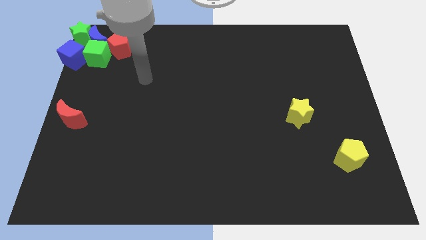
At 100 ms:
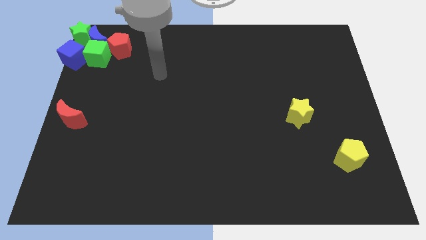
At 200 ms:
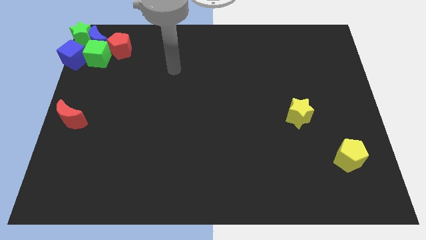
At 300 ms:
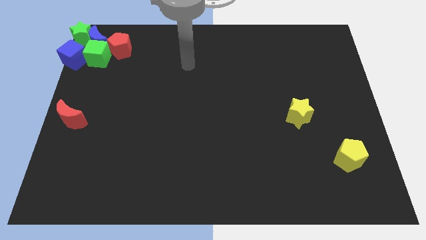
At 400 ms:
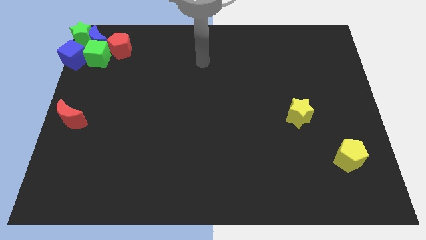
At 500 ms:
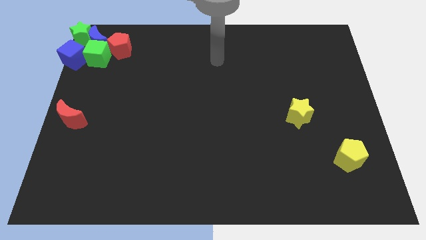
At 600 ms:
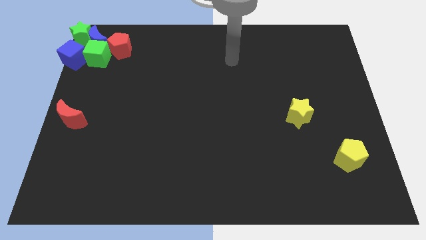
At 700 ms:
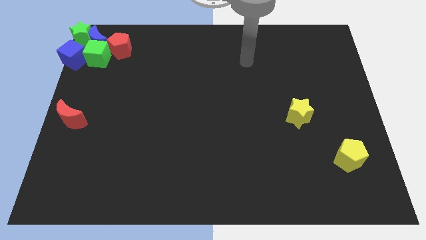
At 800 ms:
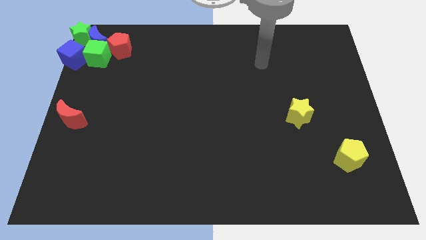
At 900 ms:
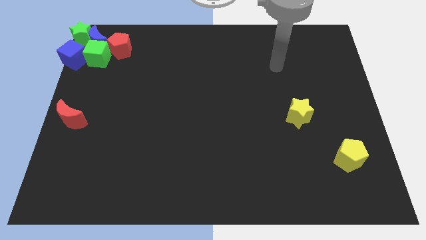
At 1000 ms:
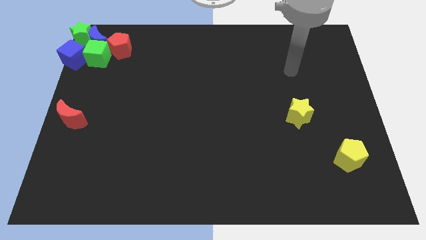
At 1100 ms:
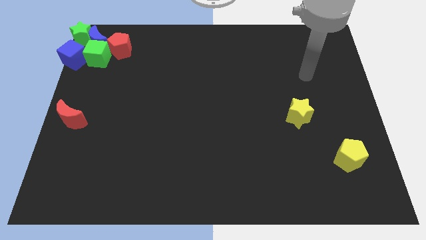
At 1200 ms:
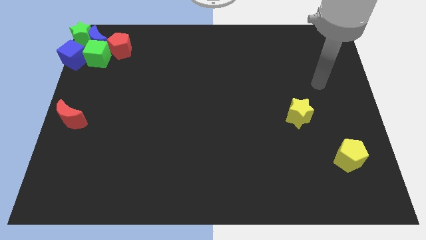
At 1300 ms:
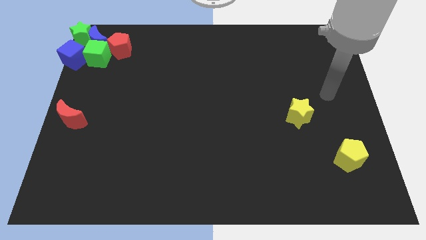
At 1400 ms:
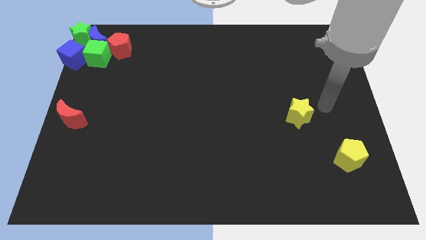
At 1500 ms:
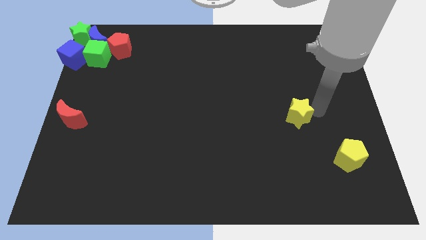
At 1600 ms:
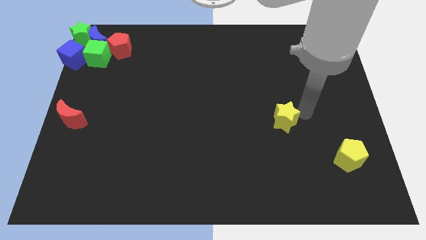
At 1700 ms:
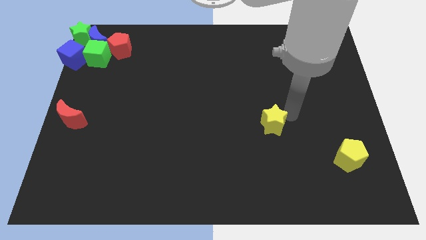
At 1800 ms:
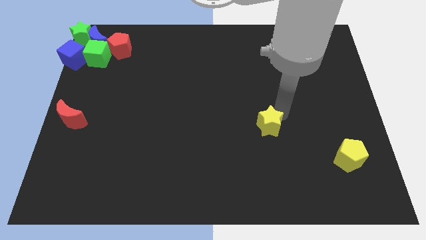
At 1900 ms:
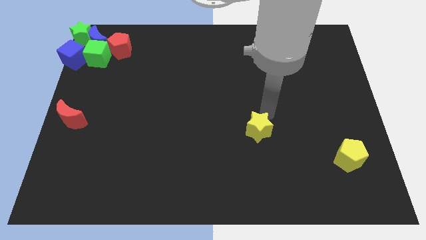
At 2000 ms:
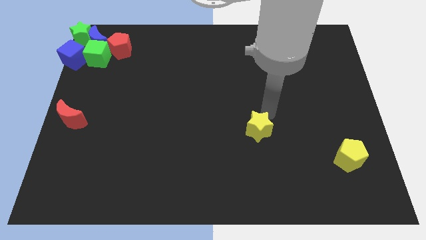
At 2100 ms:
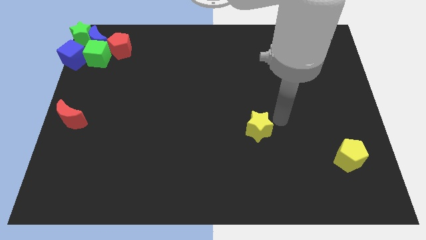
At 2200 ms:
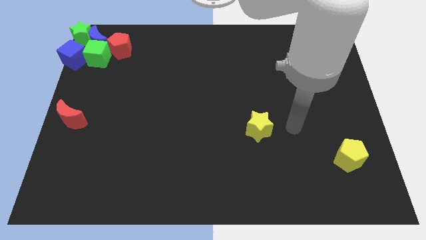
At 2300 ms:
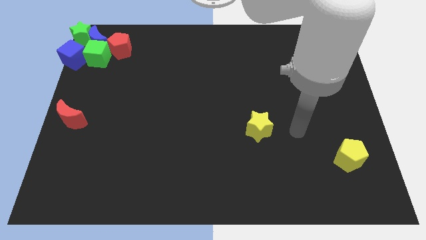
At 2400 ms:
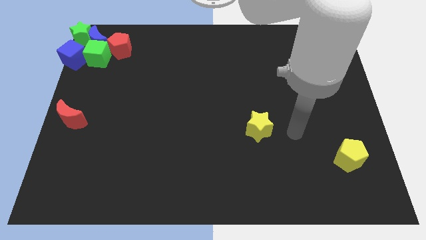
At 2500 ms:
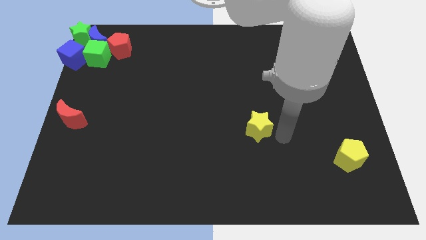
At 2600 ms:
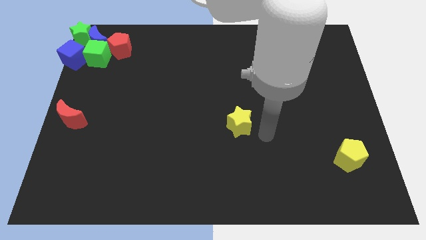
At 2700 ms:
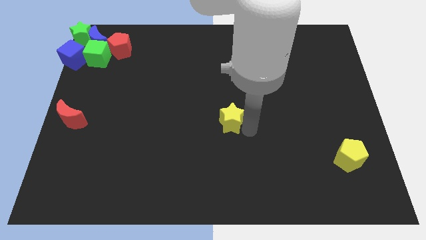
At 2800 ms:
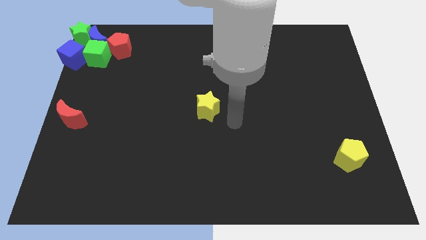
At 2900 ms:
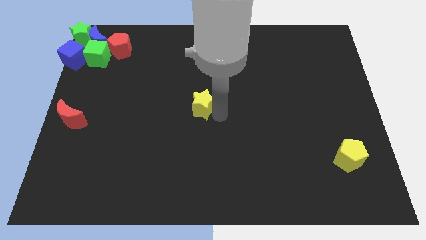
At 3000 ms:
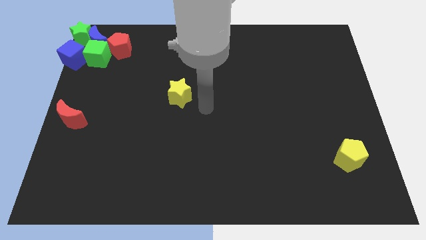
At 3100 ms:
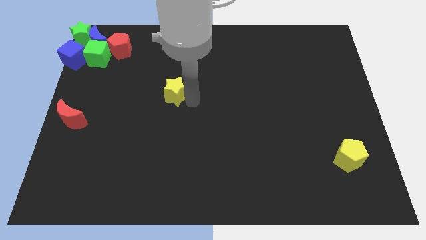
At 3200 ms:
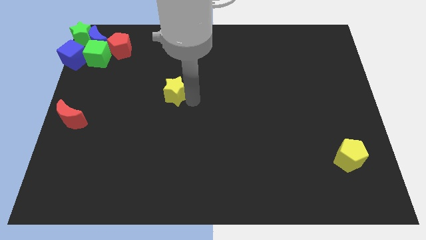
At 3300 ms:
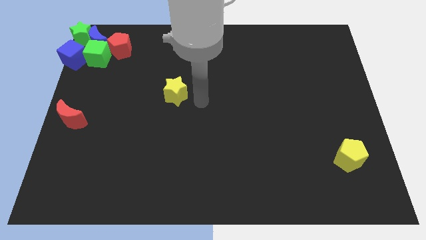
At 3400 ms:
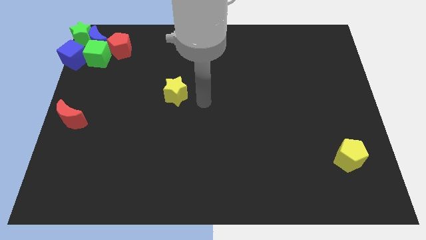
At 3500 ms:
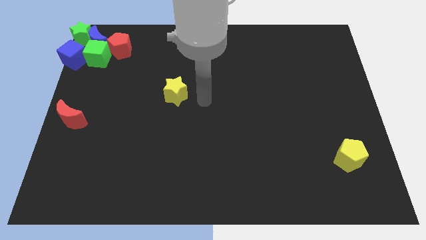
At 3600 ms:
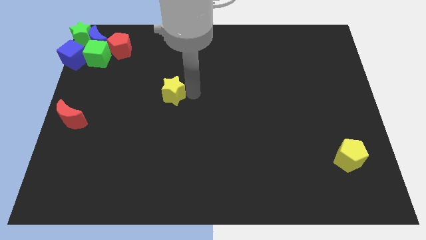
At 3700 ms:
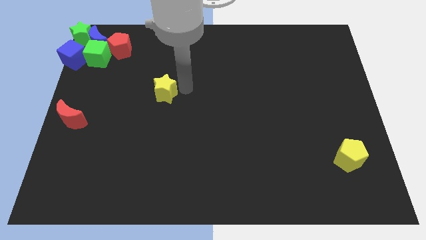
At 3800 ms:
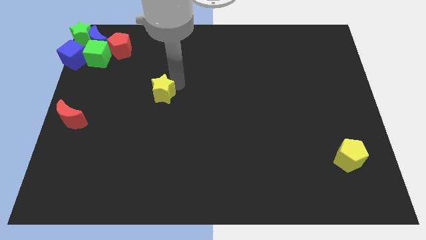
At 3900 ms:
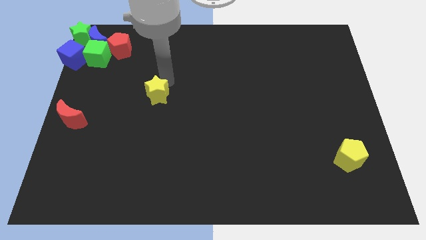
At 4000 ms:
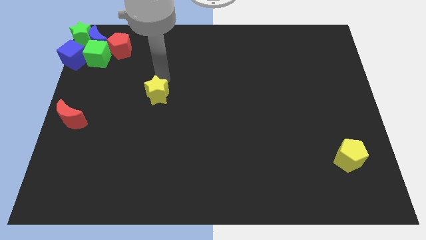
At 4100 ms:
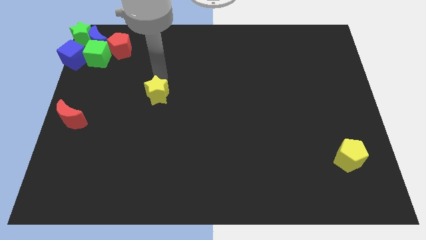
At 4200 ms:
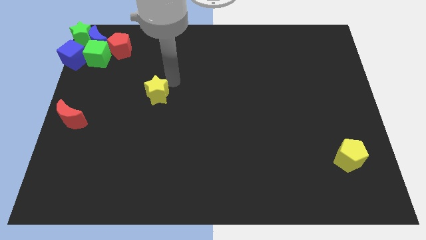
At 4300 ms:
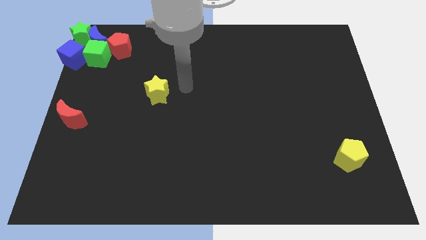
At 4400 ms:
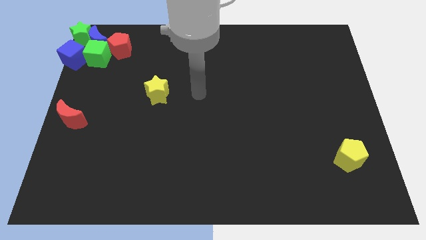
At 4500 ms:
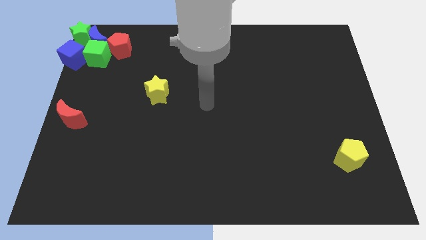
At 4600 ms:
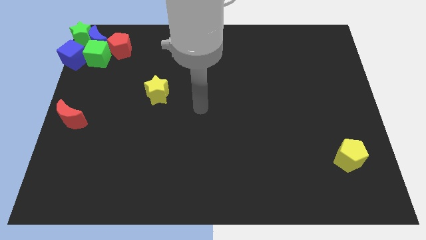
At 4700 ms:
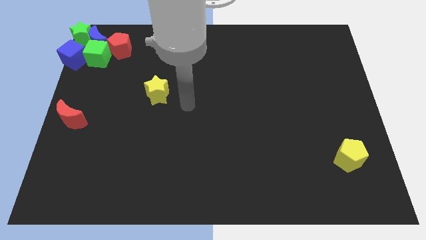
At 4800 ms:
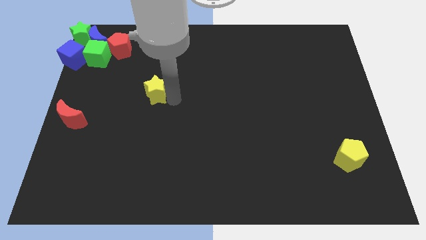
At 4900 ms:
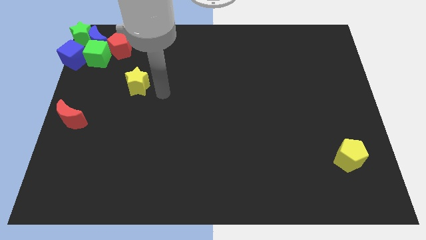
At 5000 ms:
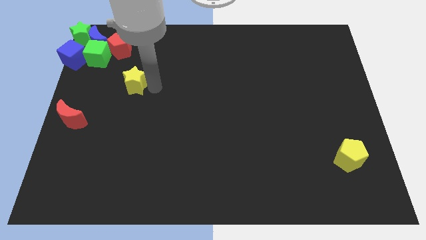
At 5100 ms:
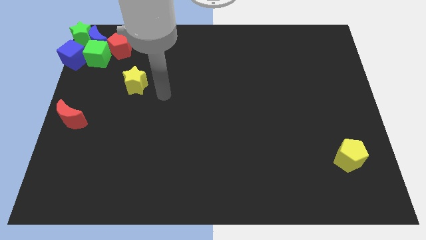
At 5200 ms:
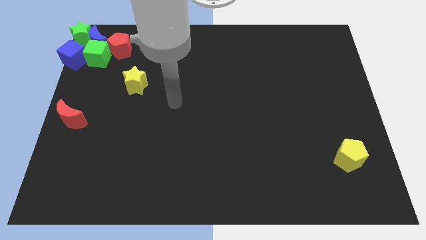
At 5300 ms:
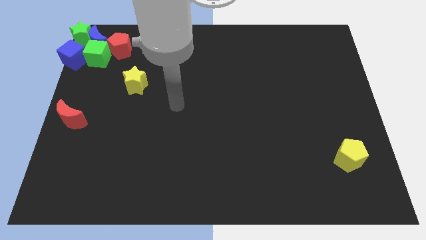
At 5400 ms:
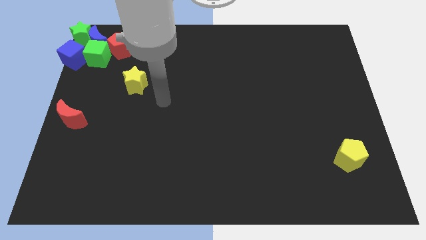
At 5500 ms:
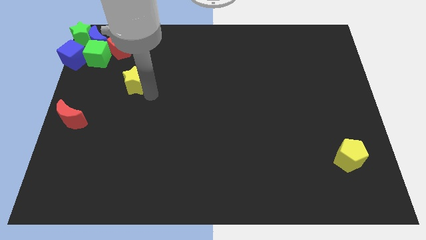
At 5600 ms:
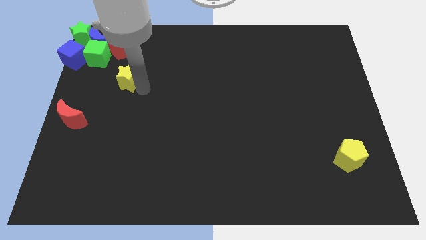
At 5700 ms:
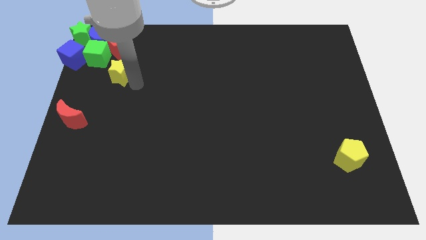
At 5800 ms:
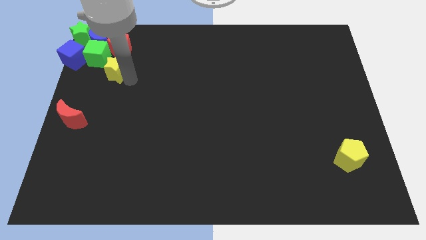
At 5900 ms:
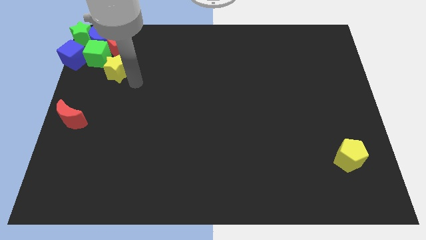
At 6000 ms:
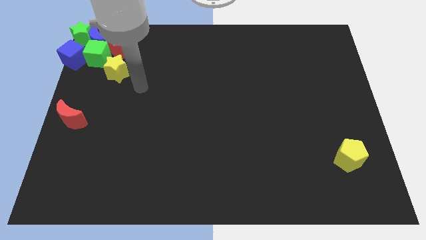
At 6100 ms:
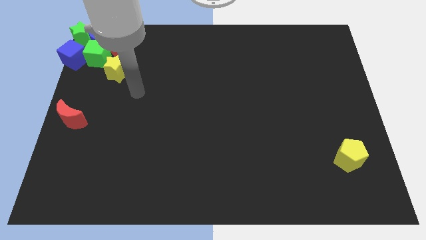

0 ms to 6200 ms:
push the yellow star diagonally to the bottom right of the green cube

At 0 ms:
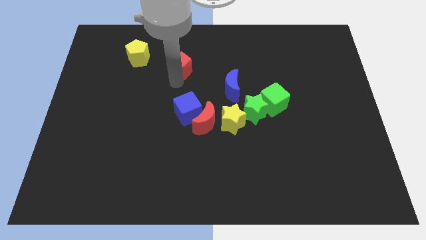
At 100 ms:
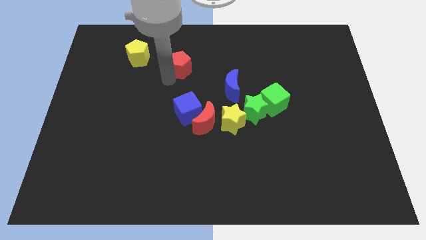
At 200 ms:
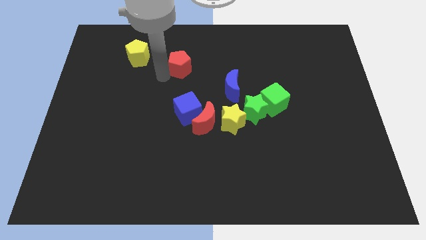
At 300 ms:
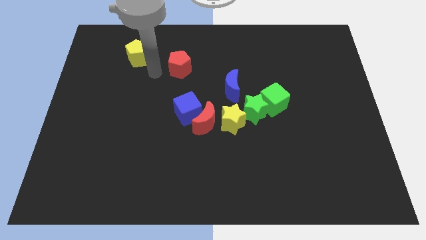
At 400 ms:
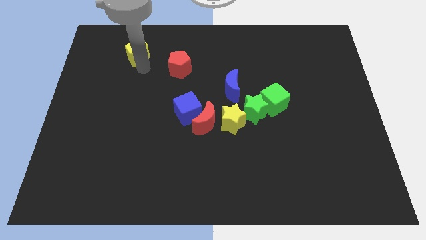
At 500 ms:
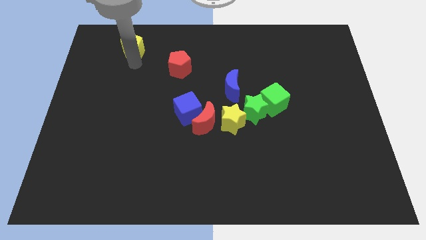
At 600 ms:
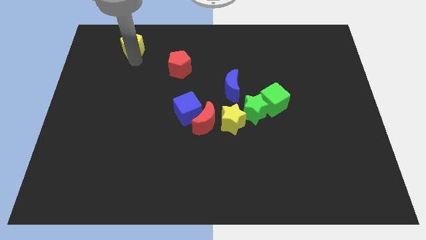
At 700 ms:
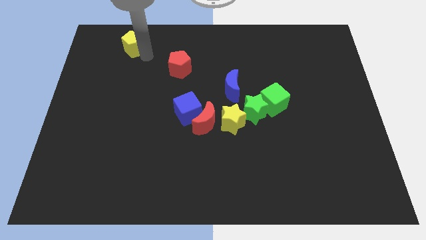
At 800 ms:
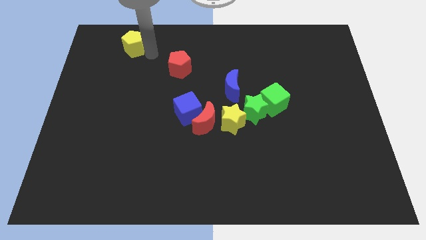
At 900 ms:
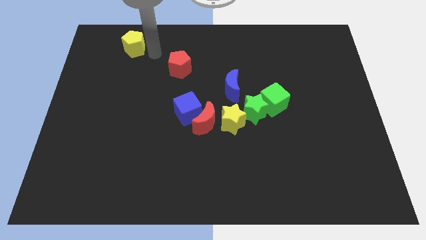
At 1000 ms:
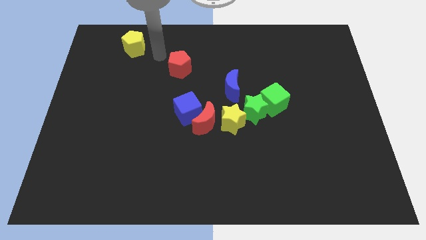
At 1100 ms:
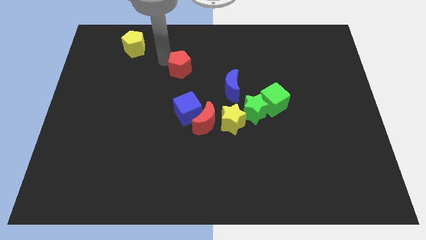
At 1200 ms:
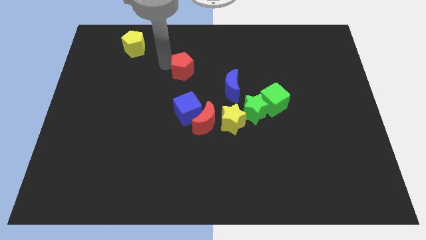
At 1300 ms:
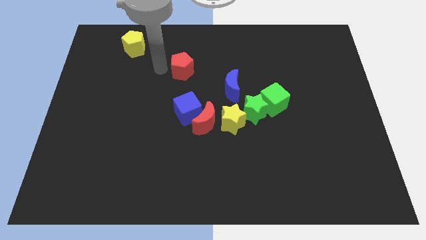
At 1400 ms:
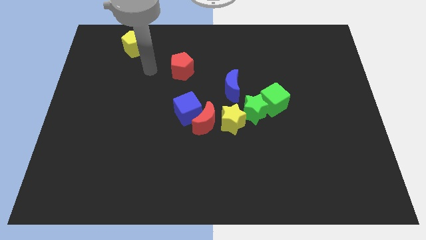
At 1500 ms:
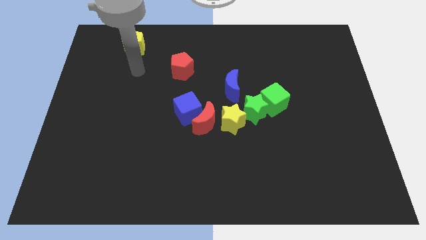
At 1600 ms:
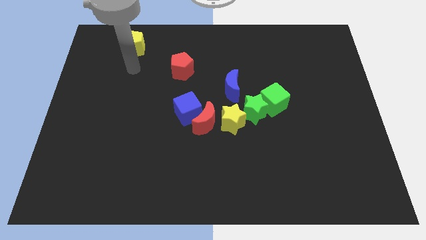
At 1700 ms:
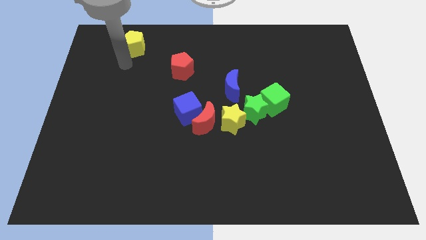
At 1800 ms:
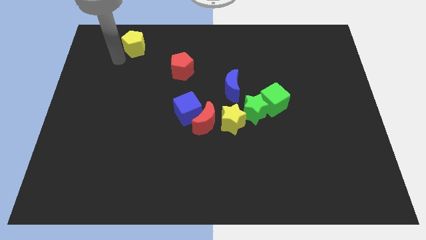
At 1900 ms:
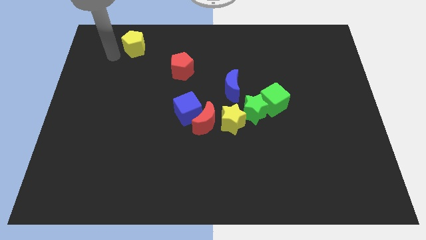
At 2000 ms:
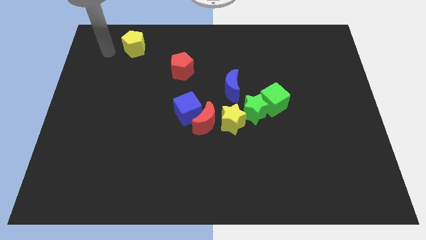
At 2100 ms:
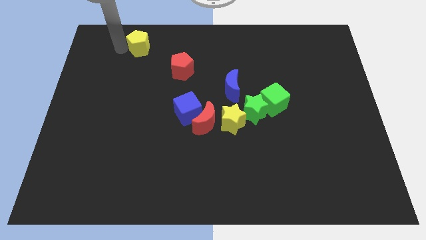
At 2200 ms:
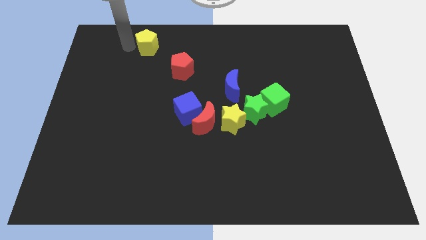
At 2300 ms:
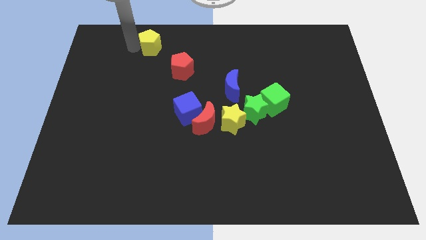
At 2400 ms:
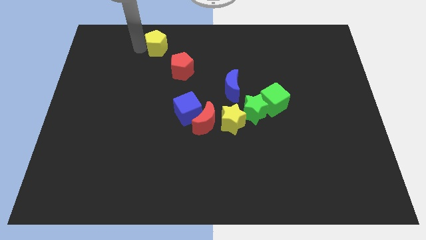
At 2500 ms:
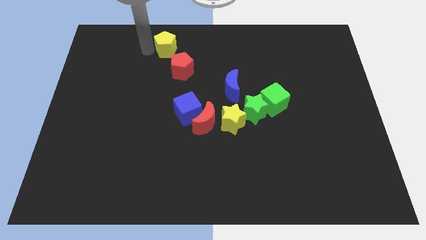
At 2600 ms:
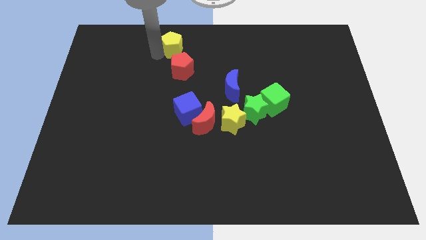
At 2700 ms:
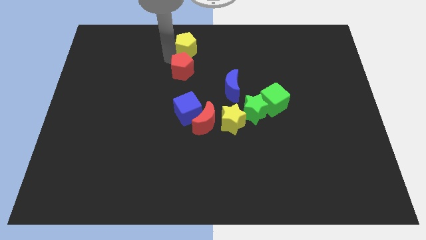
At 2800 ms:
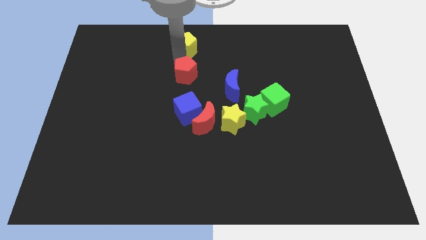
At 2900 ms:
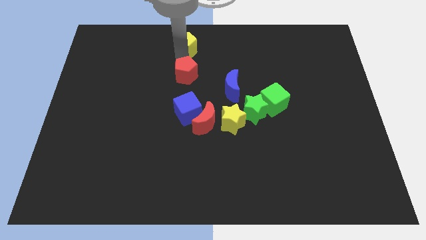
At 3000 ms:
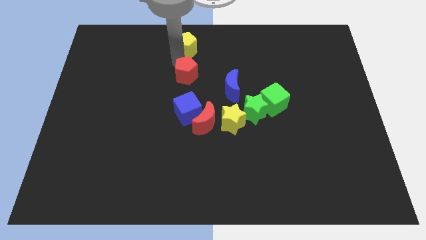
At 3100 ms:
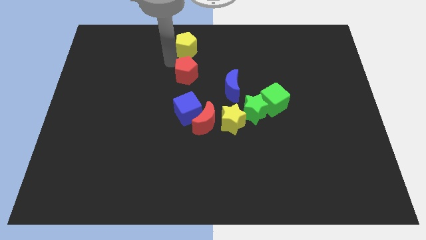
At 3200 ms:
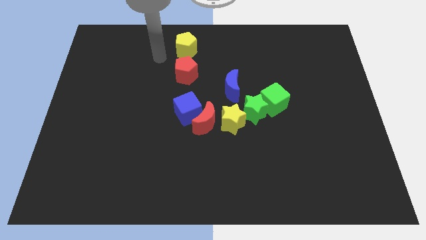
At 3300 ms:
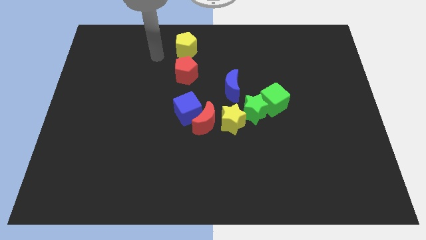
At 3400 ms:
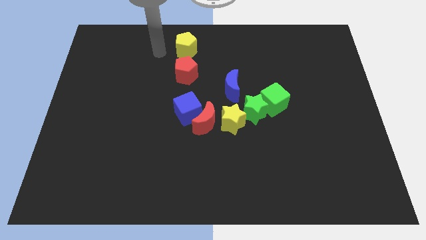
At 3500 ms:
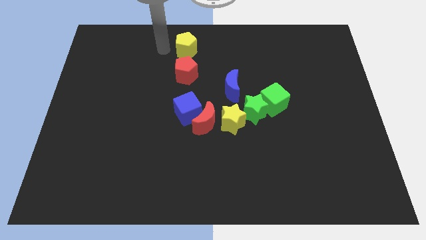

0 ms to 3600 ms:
push the yellow pentagon at the top side of the red pentagon
